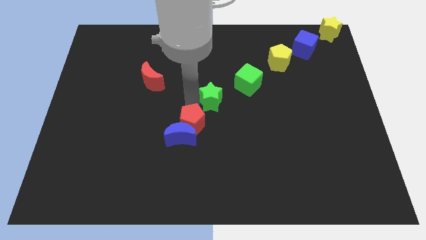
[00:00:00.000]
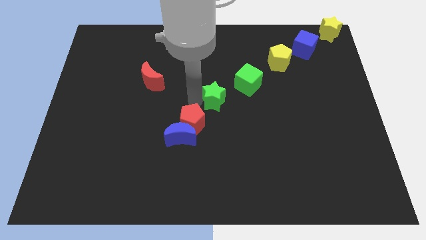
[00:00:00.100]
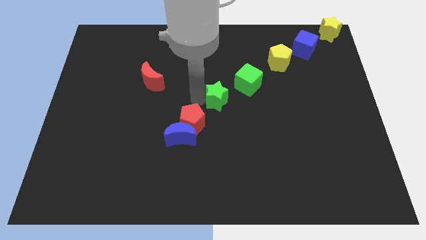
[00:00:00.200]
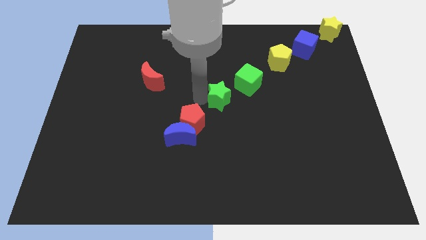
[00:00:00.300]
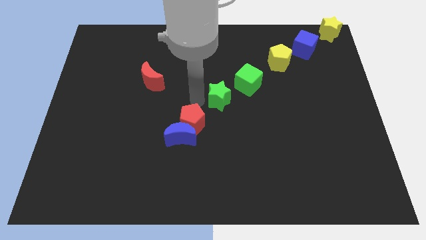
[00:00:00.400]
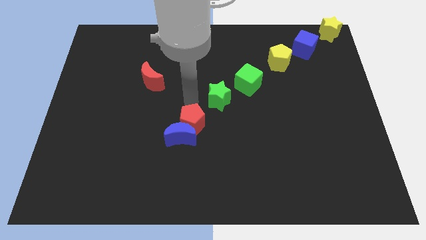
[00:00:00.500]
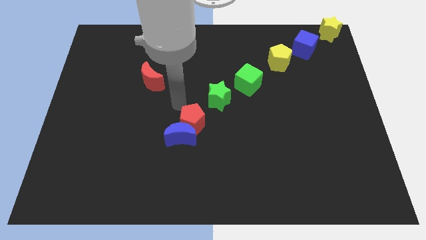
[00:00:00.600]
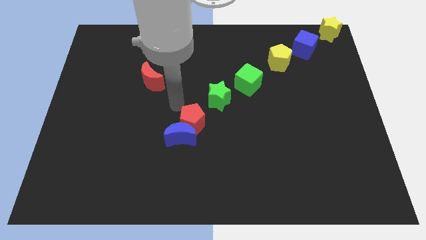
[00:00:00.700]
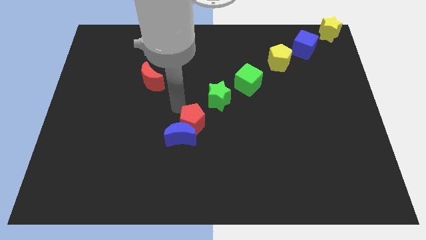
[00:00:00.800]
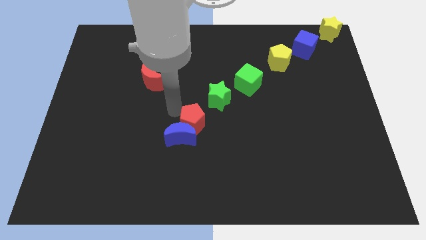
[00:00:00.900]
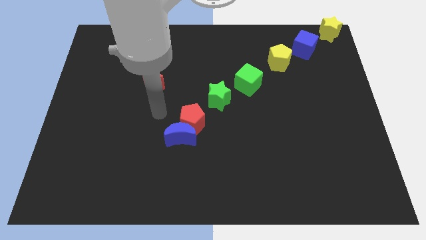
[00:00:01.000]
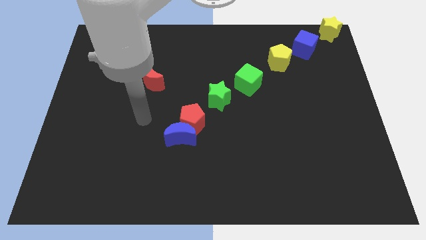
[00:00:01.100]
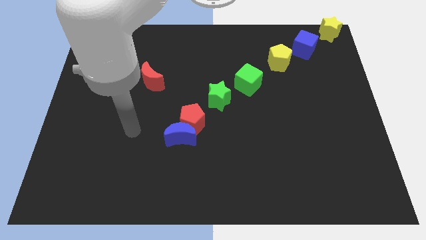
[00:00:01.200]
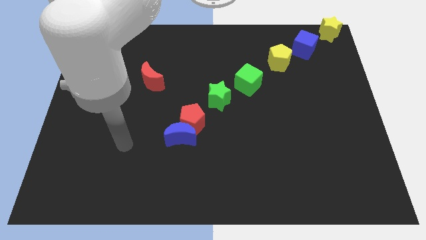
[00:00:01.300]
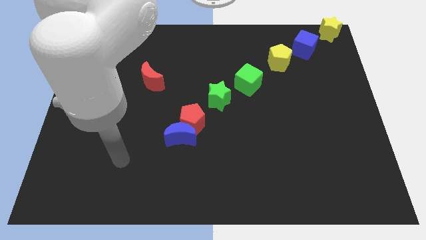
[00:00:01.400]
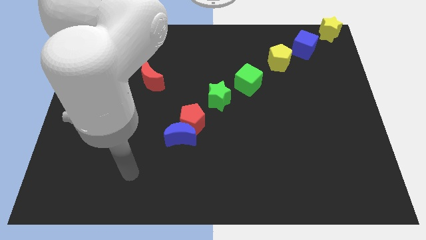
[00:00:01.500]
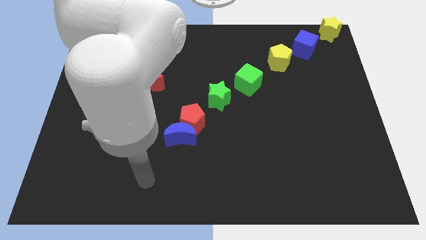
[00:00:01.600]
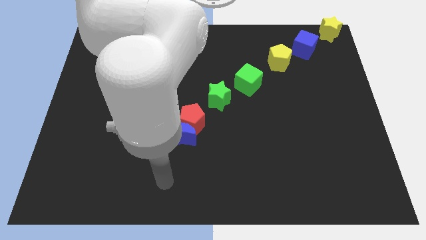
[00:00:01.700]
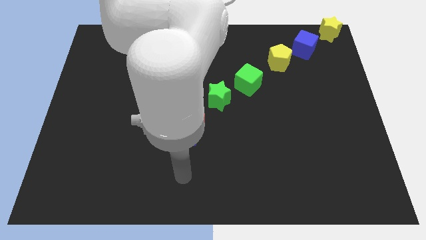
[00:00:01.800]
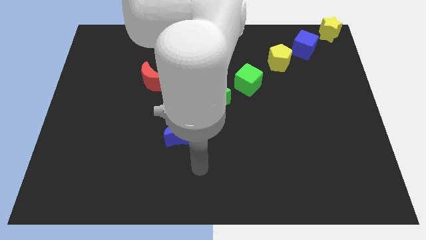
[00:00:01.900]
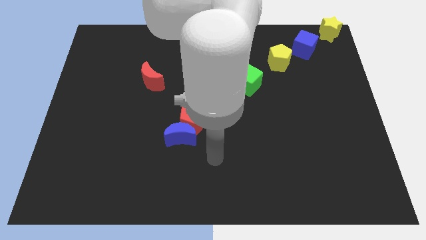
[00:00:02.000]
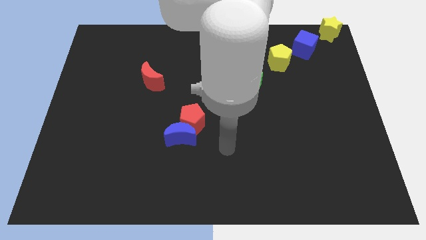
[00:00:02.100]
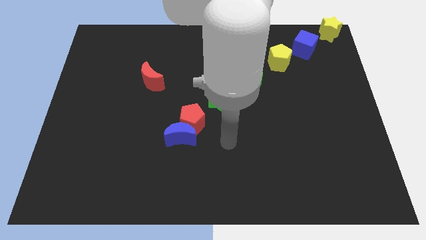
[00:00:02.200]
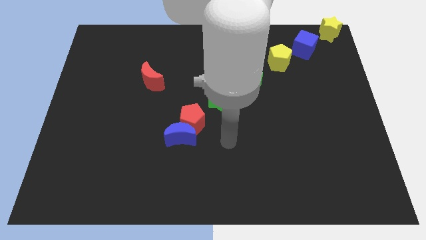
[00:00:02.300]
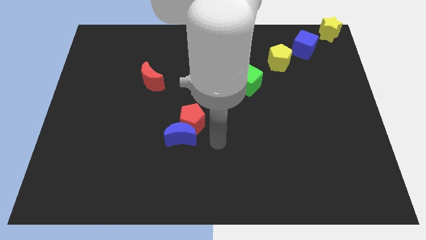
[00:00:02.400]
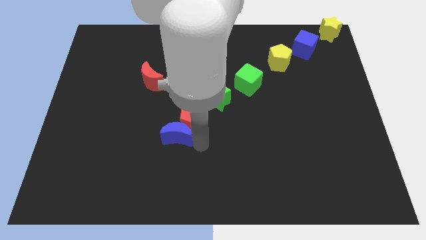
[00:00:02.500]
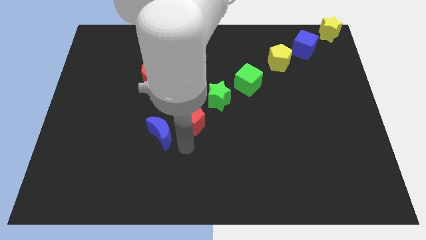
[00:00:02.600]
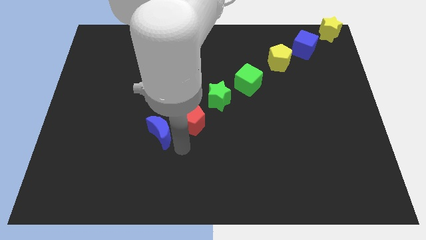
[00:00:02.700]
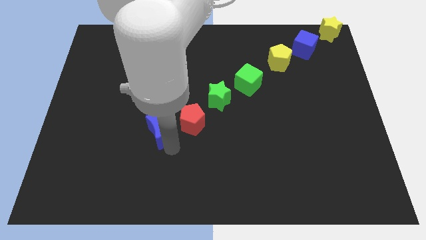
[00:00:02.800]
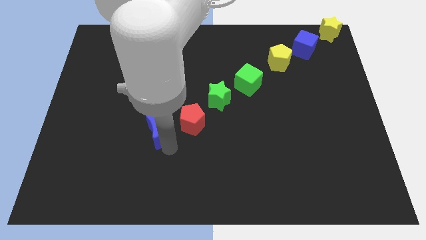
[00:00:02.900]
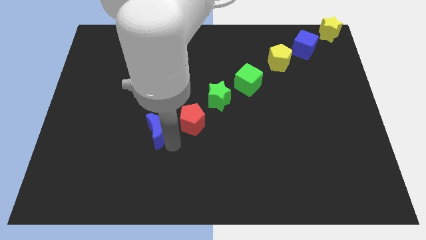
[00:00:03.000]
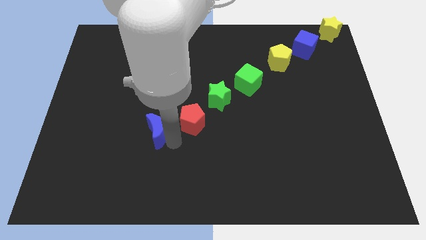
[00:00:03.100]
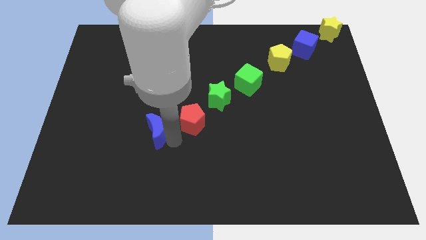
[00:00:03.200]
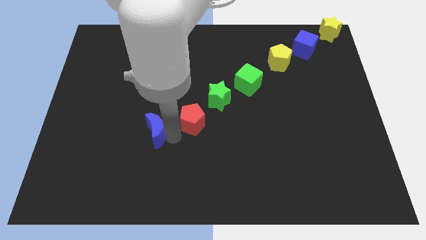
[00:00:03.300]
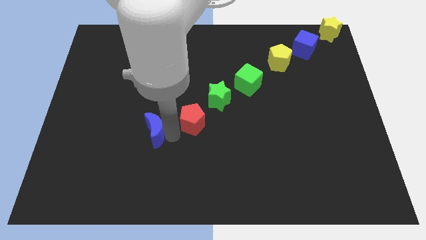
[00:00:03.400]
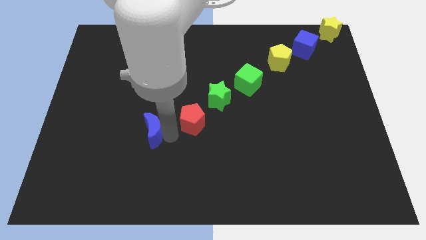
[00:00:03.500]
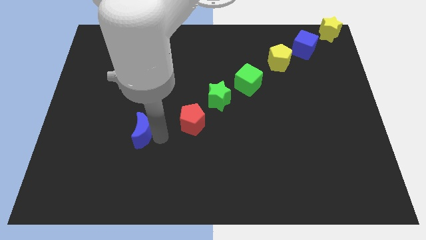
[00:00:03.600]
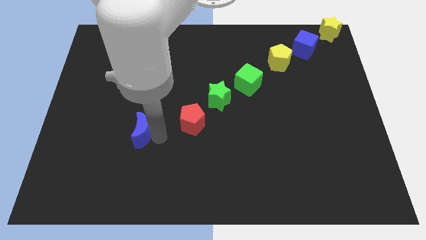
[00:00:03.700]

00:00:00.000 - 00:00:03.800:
push blue crescent below red crescent

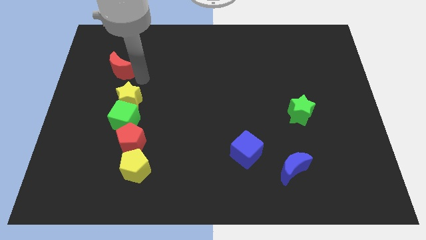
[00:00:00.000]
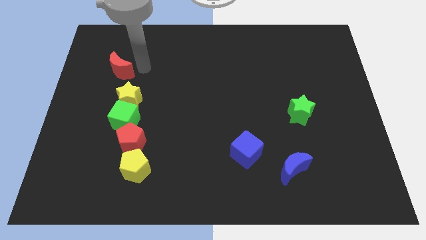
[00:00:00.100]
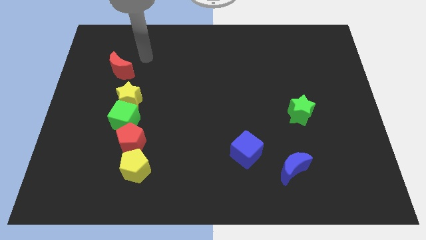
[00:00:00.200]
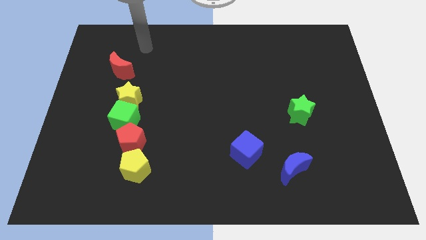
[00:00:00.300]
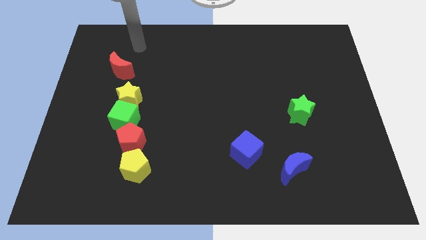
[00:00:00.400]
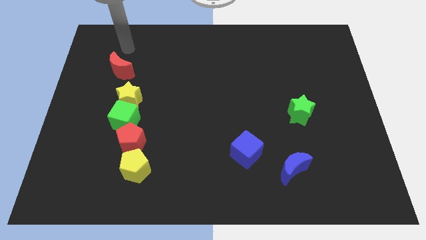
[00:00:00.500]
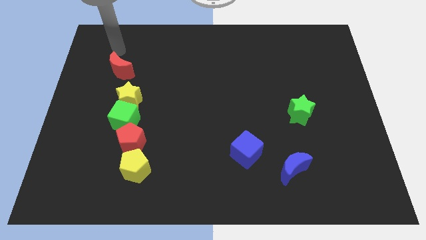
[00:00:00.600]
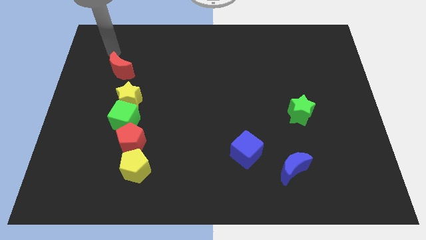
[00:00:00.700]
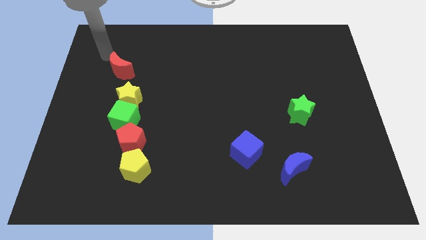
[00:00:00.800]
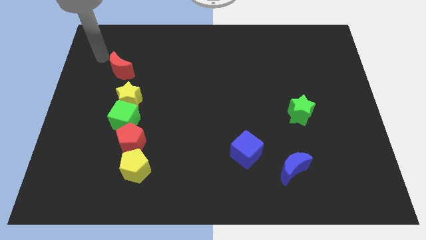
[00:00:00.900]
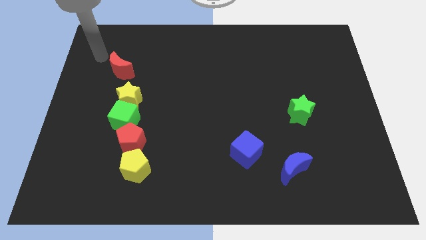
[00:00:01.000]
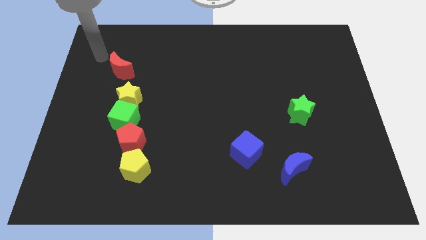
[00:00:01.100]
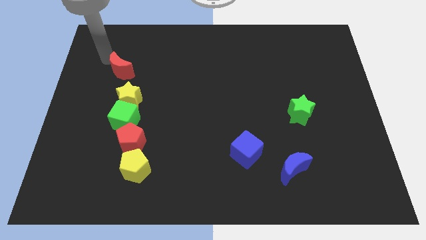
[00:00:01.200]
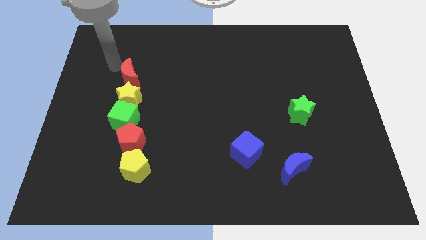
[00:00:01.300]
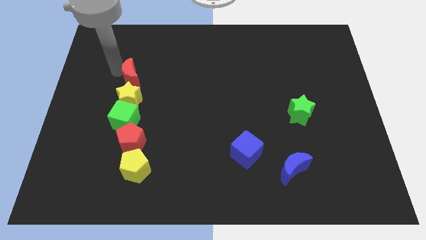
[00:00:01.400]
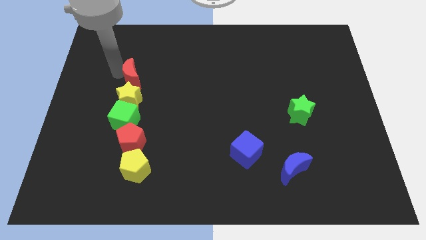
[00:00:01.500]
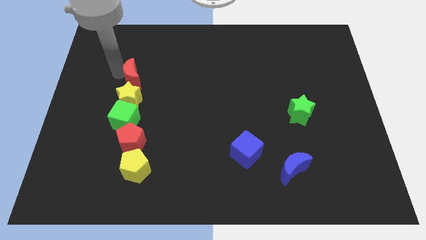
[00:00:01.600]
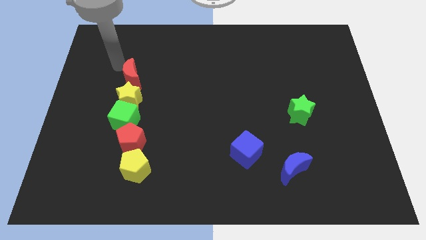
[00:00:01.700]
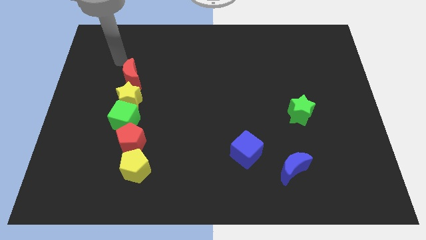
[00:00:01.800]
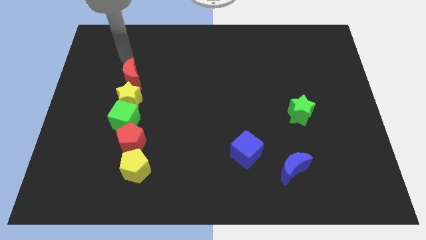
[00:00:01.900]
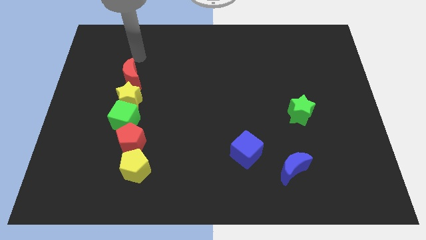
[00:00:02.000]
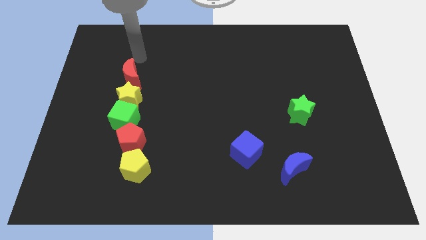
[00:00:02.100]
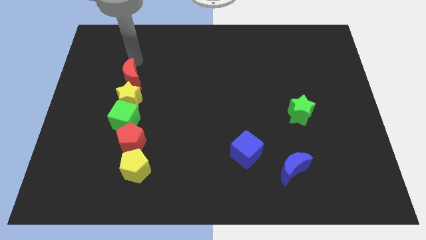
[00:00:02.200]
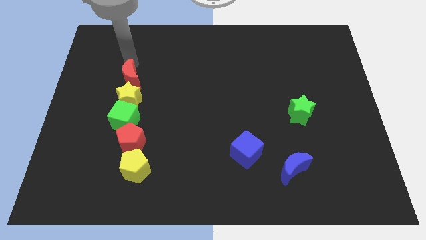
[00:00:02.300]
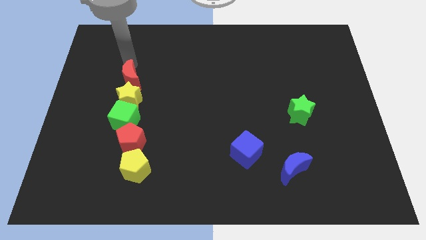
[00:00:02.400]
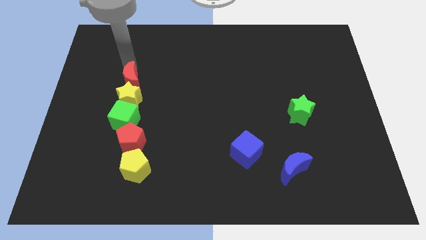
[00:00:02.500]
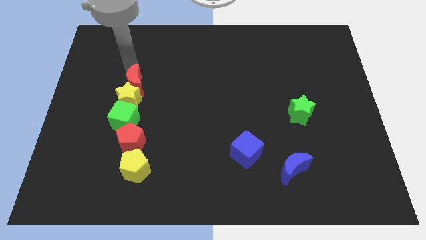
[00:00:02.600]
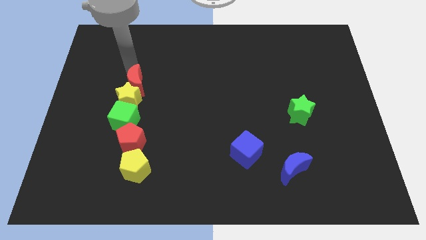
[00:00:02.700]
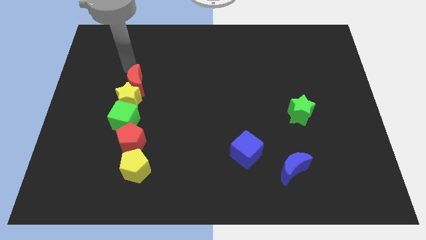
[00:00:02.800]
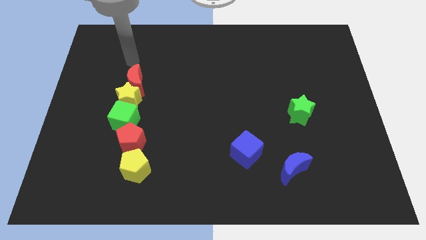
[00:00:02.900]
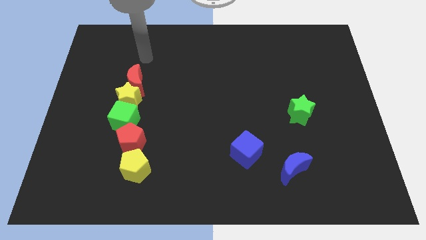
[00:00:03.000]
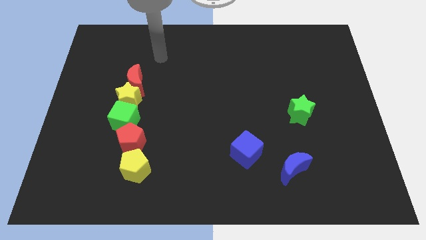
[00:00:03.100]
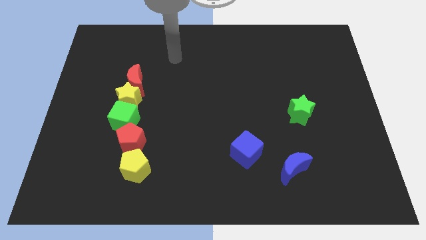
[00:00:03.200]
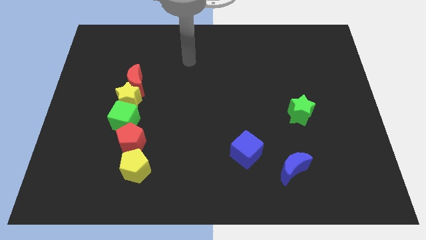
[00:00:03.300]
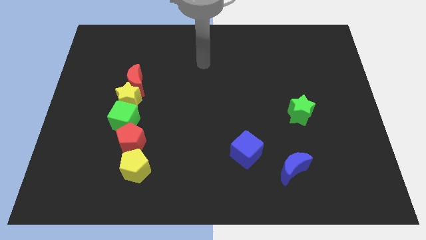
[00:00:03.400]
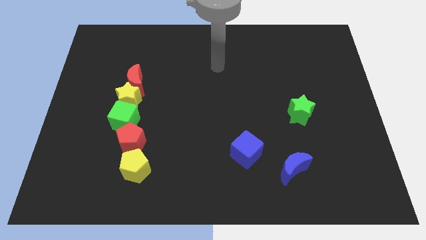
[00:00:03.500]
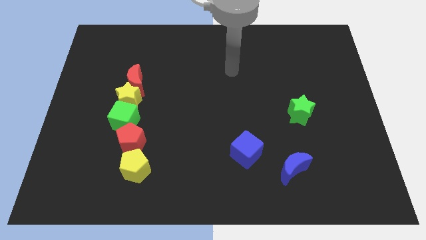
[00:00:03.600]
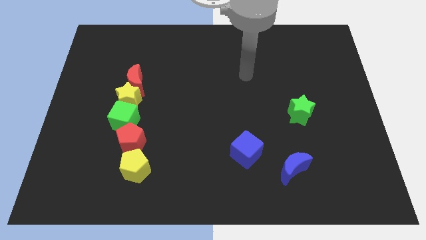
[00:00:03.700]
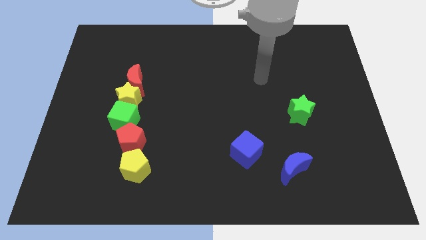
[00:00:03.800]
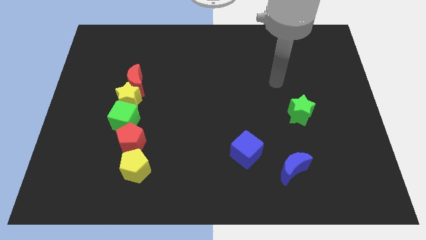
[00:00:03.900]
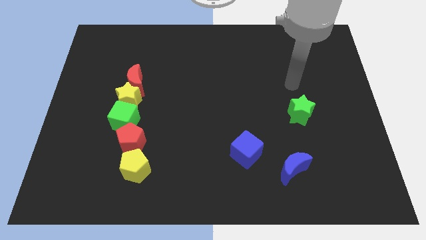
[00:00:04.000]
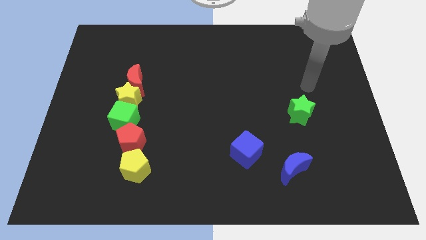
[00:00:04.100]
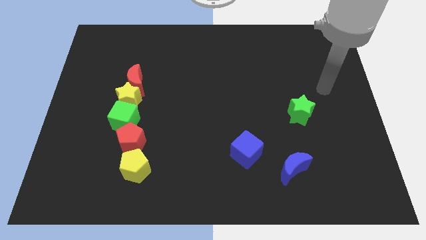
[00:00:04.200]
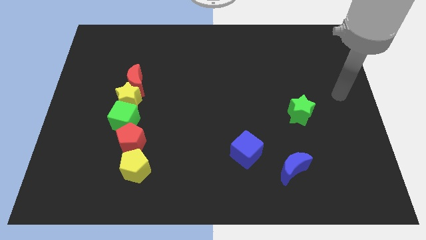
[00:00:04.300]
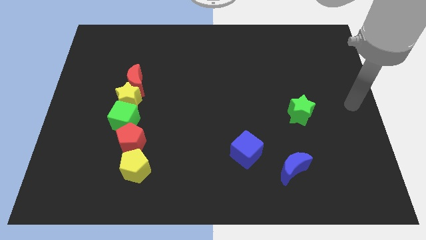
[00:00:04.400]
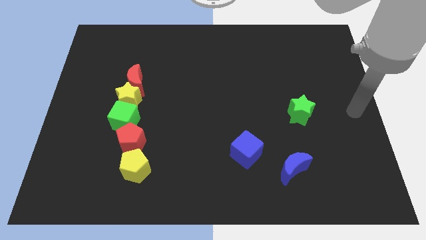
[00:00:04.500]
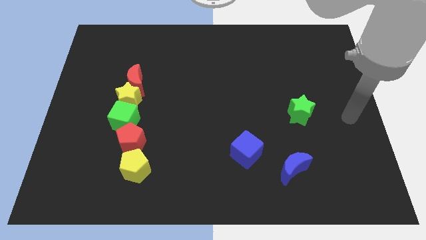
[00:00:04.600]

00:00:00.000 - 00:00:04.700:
move the red moon into the yellow star

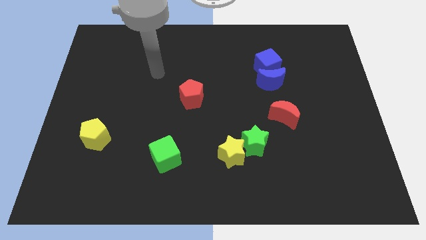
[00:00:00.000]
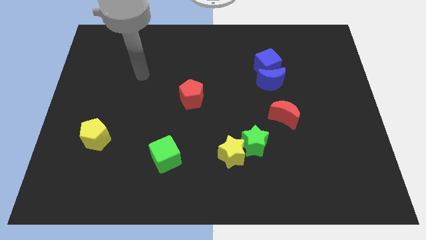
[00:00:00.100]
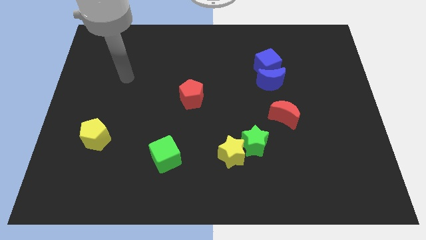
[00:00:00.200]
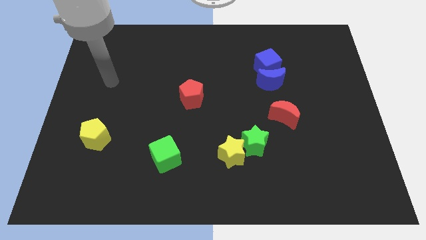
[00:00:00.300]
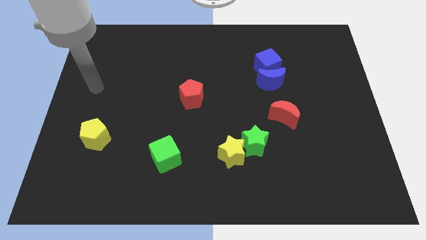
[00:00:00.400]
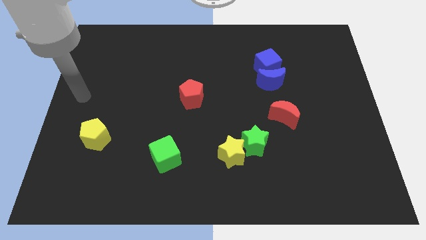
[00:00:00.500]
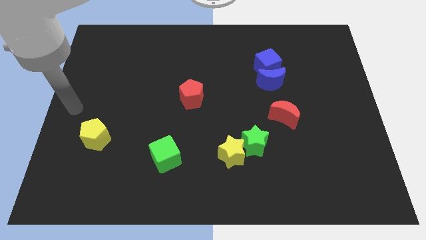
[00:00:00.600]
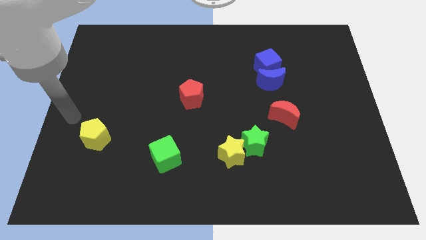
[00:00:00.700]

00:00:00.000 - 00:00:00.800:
move arm close to yellow pentagon
